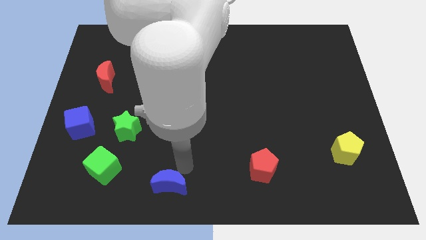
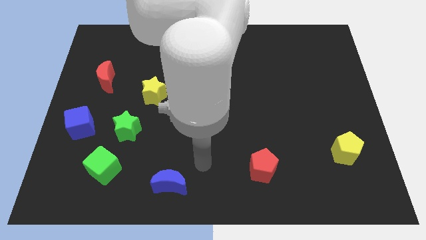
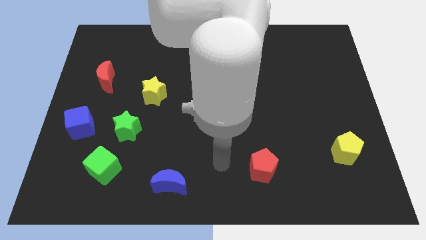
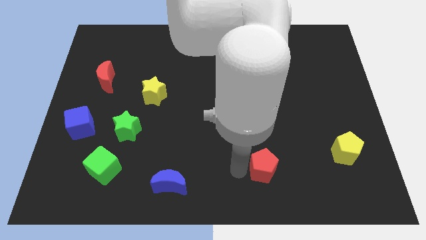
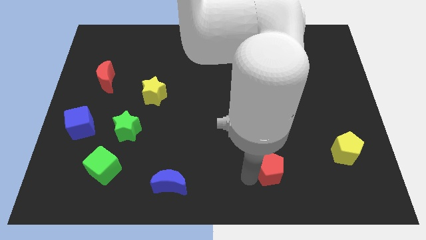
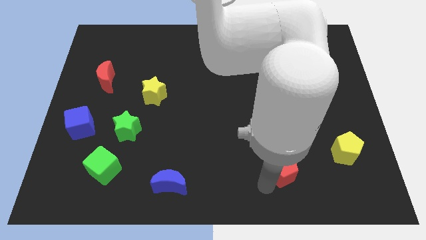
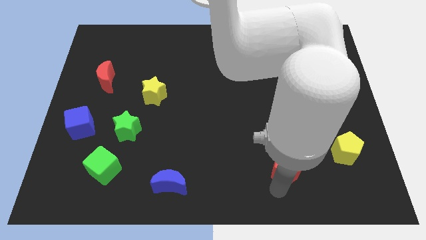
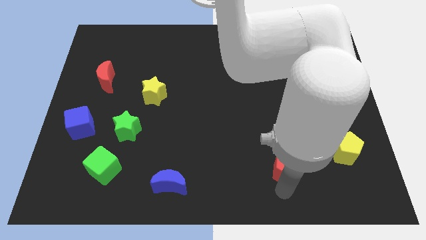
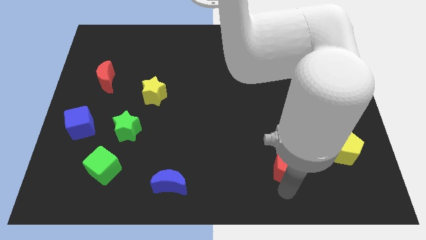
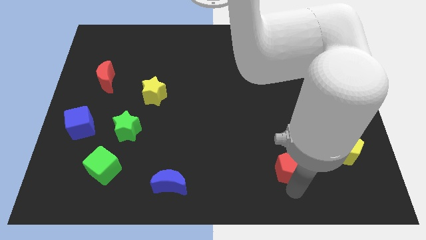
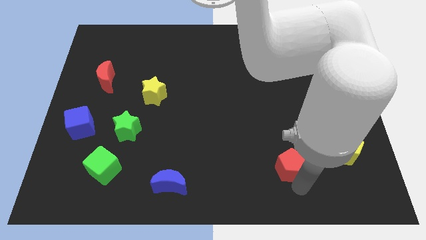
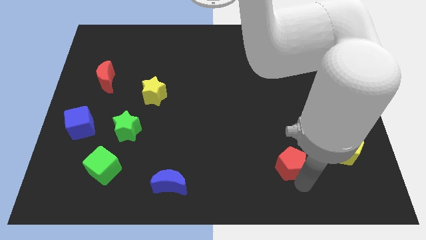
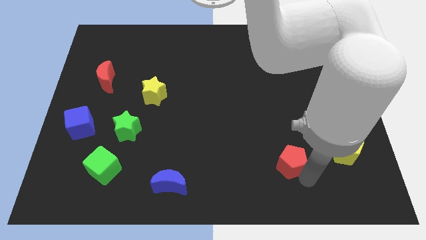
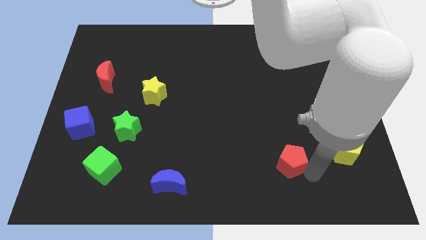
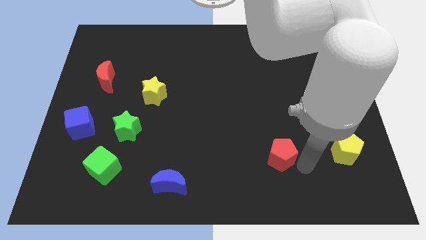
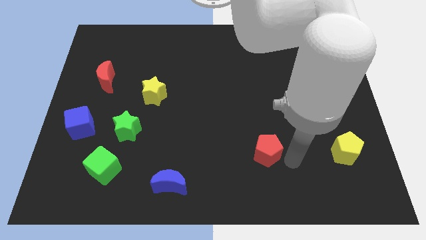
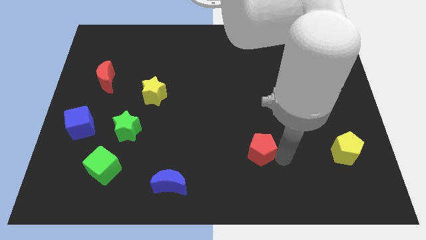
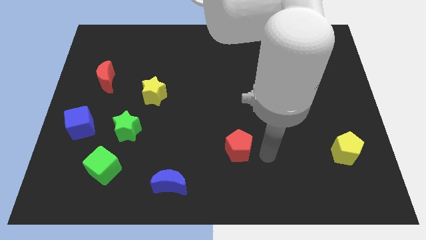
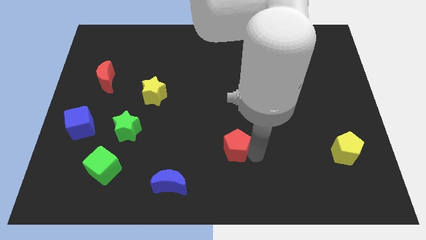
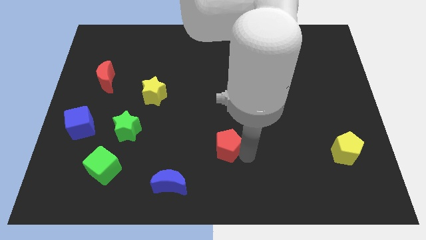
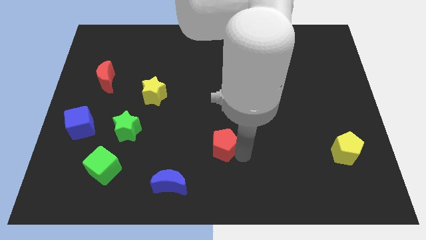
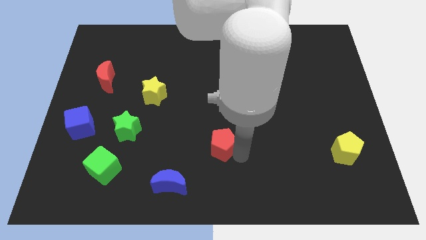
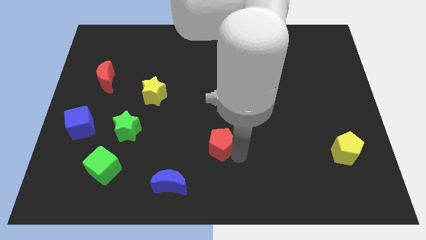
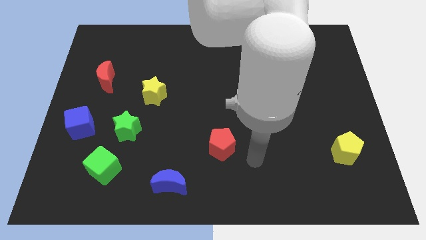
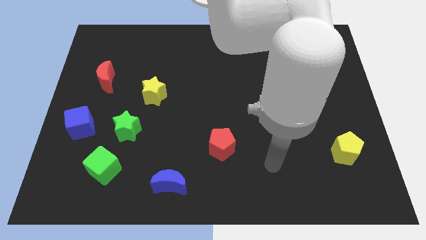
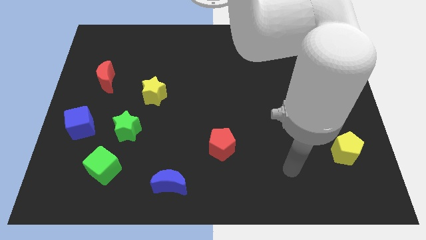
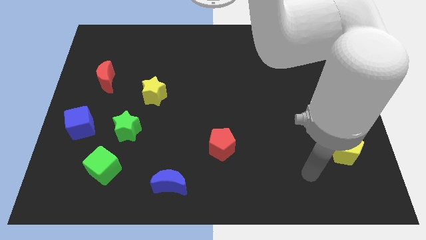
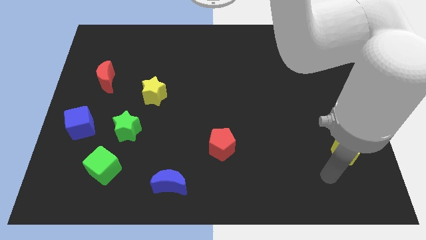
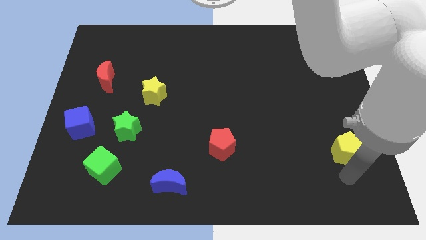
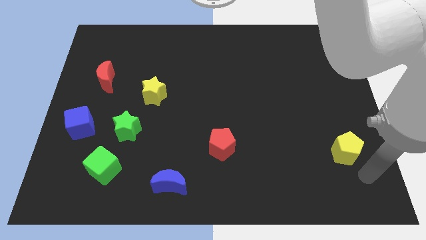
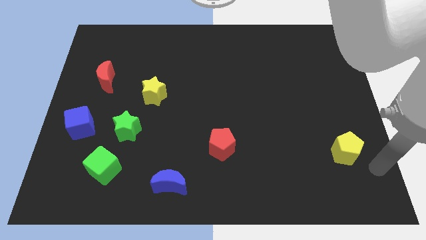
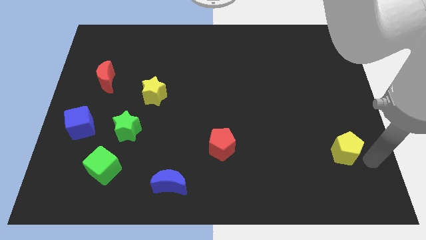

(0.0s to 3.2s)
push the red pentagon to the left of the yellow pentagon

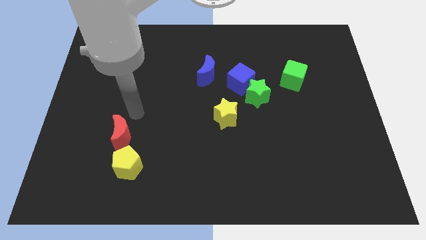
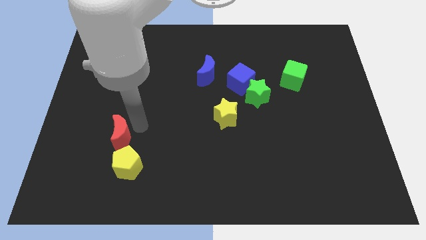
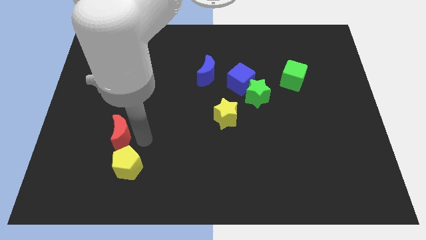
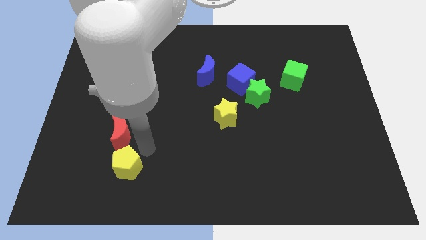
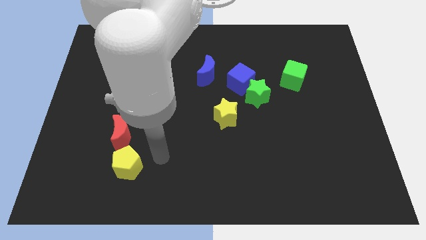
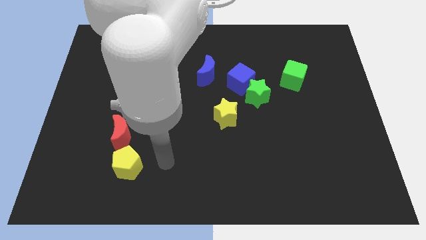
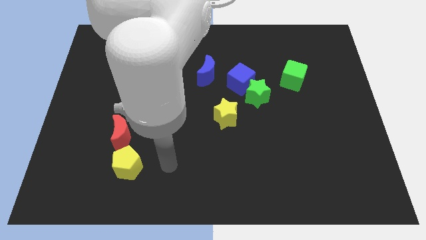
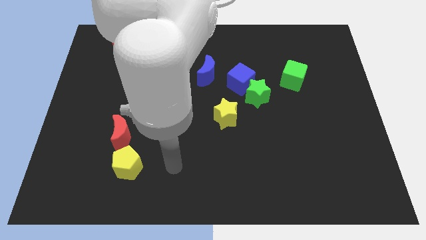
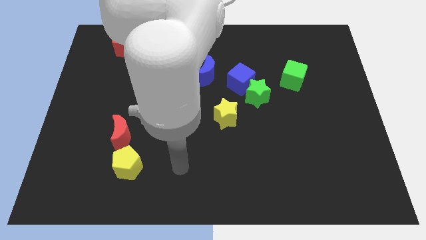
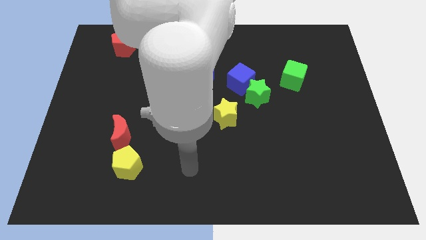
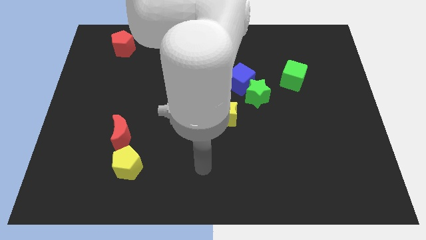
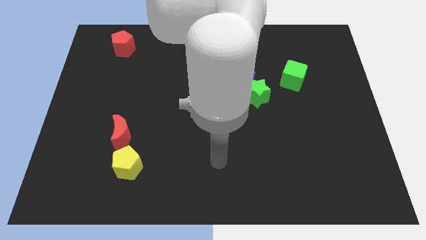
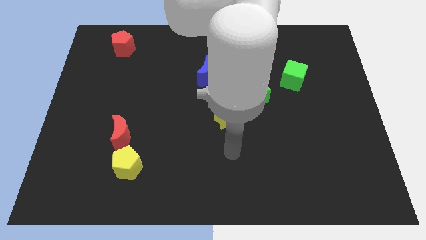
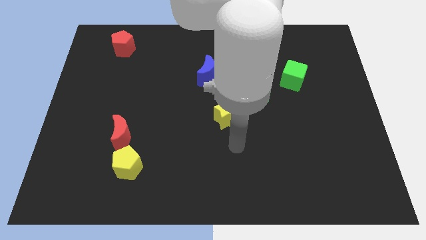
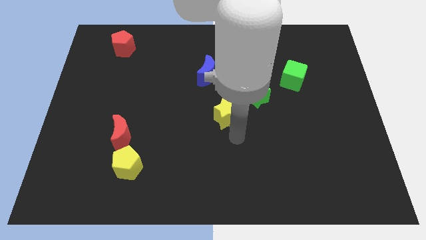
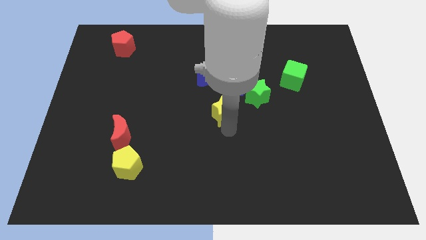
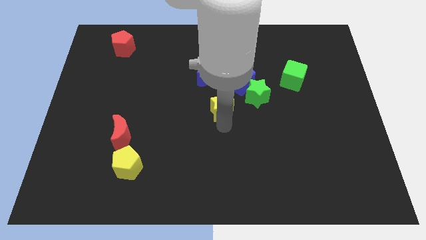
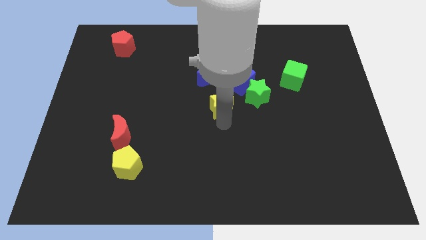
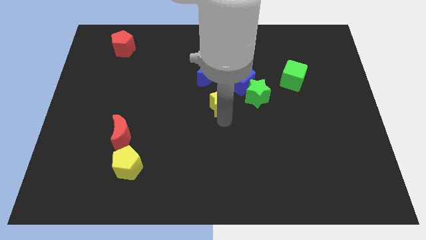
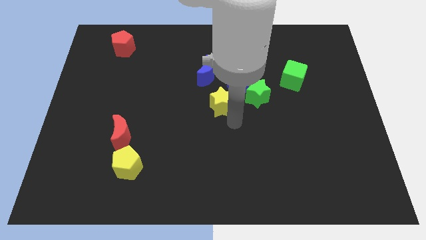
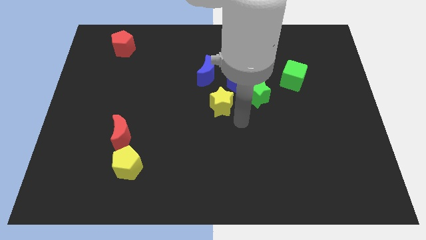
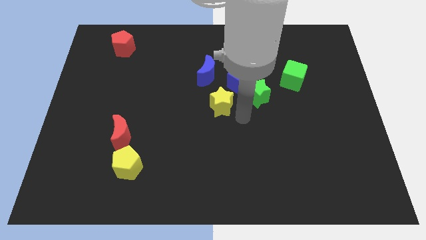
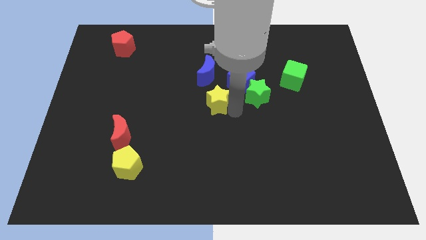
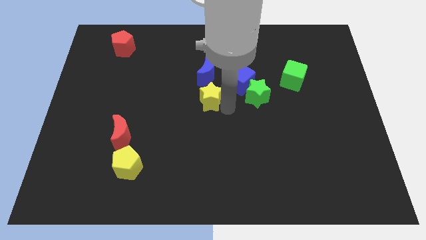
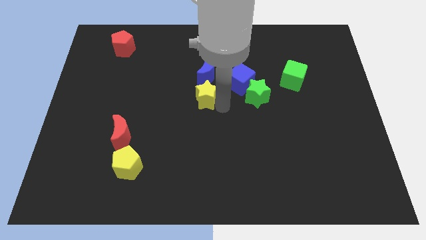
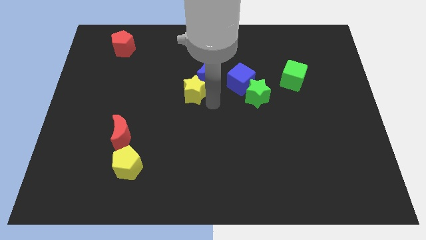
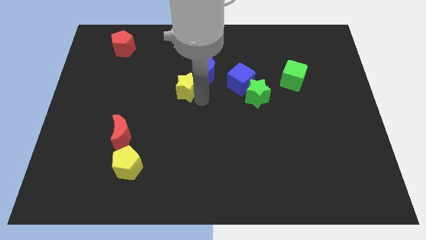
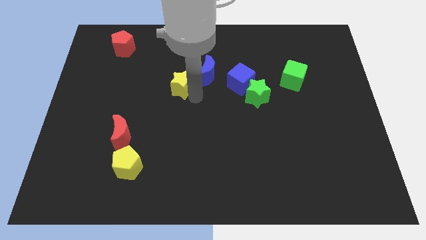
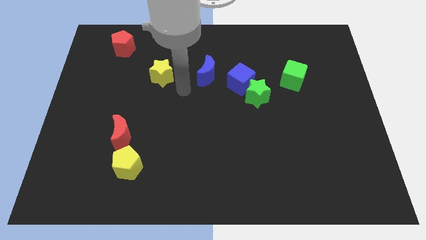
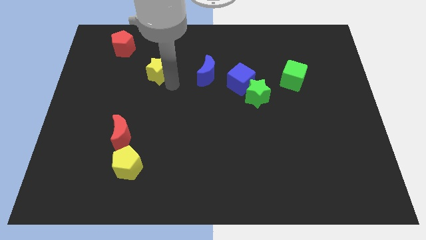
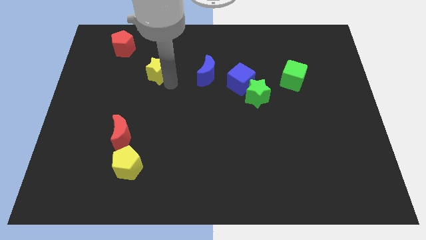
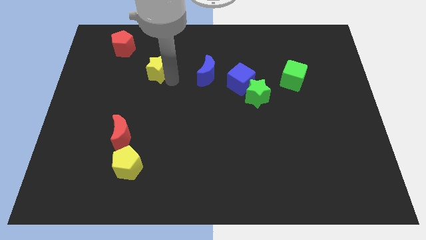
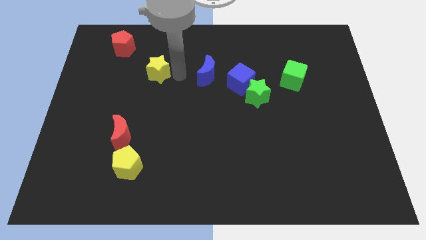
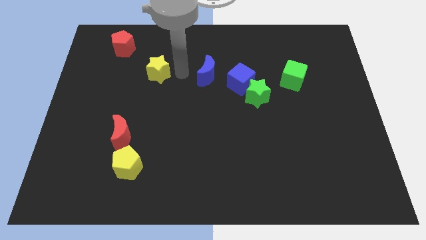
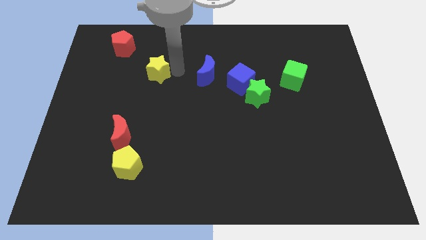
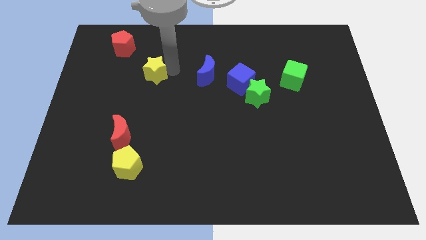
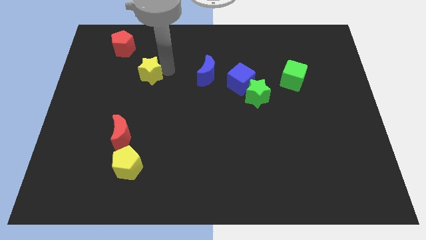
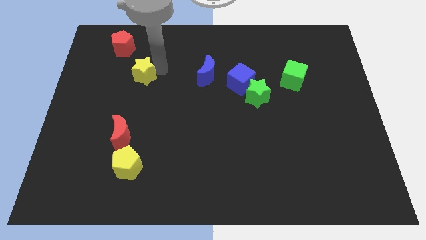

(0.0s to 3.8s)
move the yellow pentagon diagonally below the red pentagon

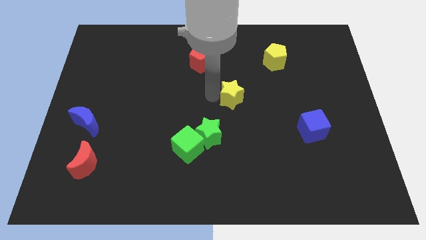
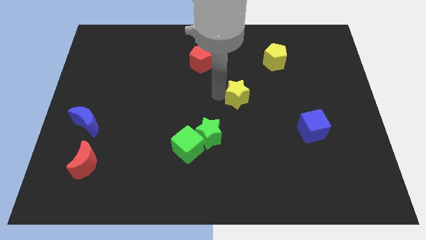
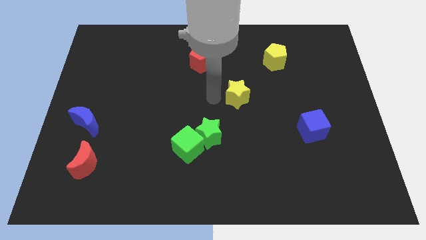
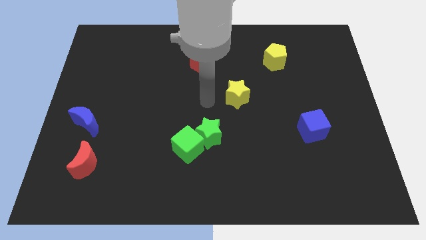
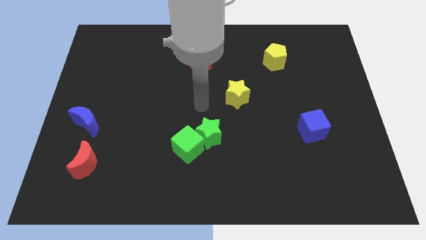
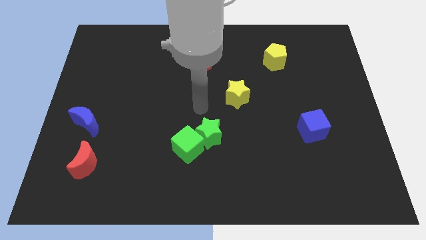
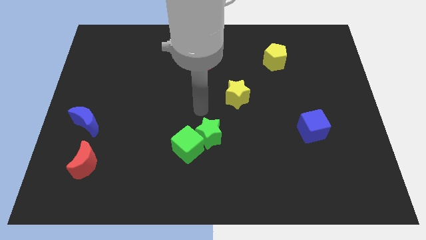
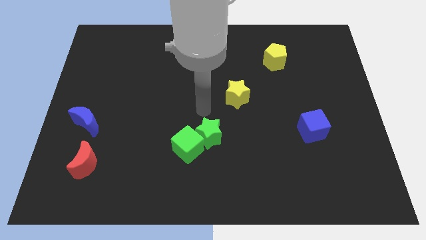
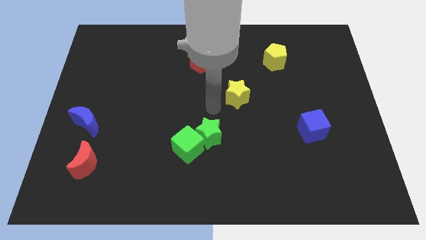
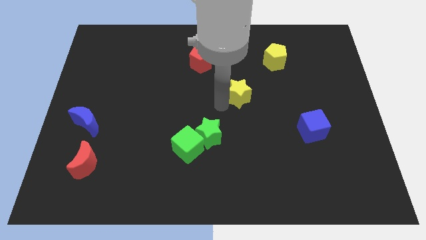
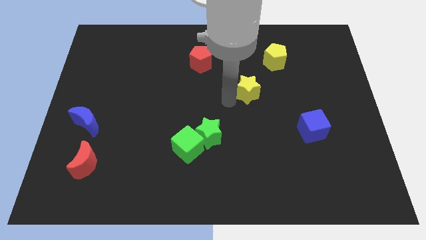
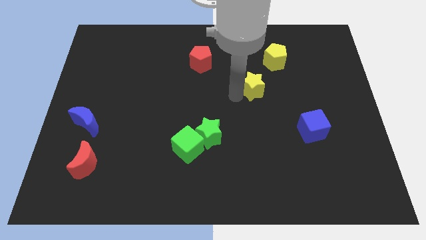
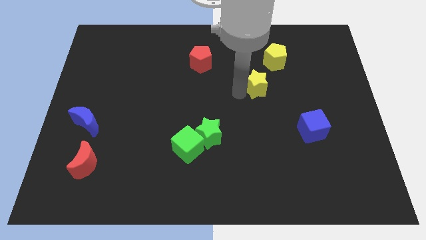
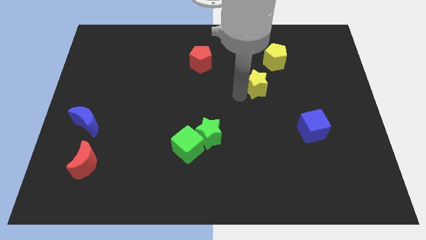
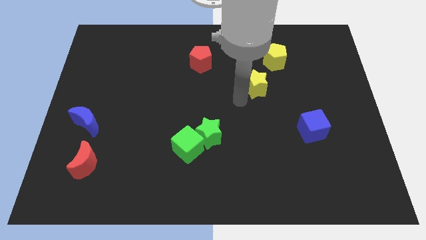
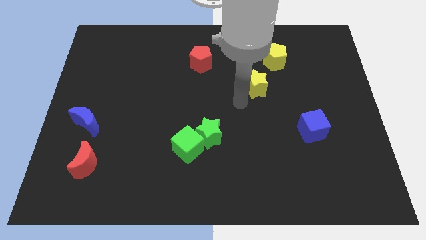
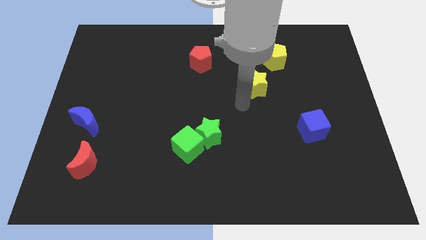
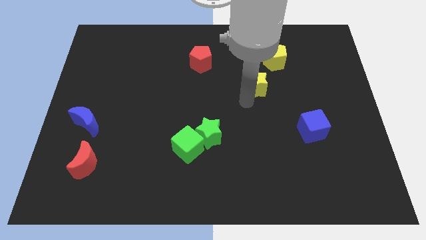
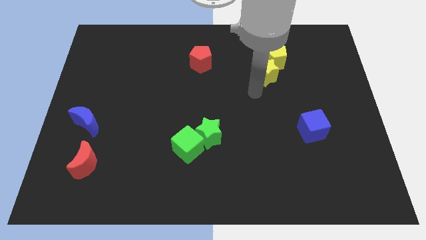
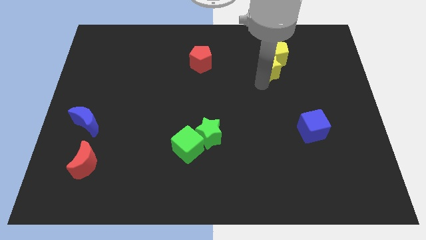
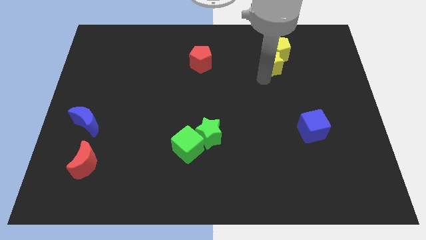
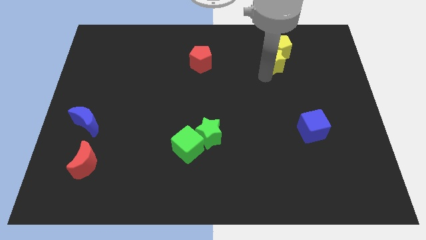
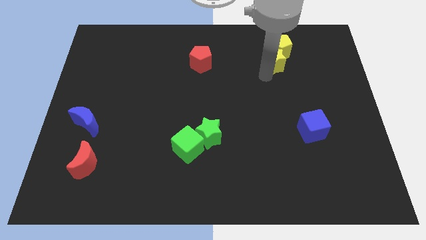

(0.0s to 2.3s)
push the yellow star into the yellow pentagon
